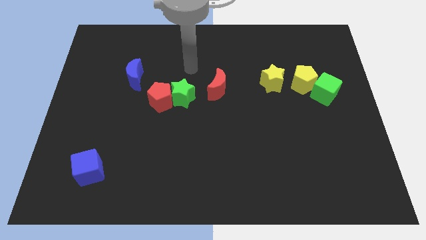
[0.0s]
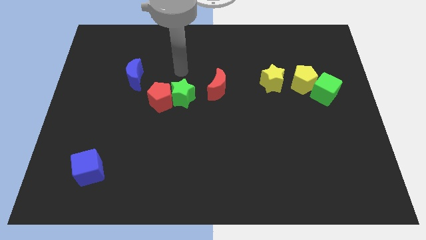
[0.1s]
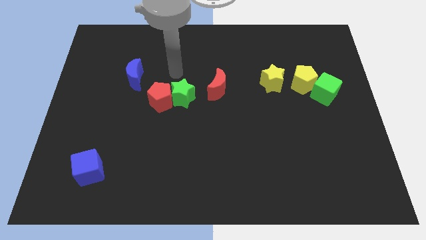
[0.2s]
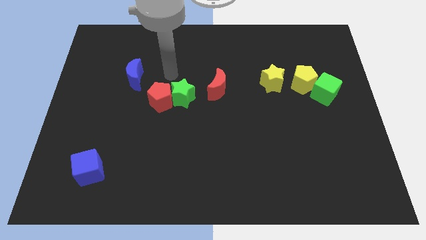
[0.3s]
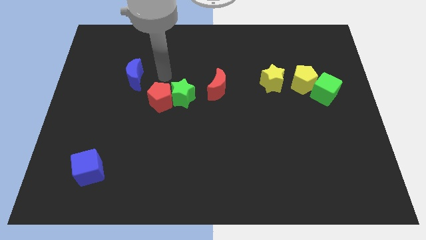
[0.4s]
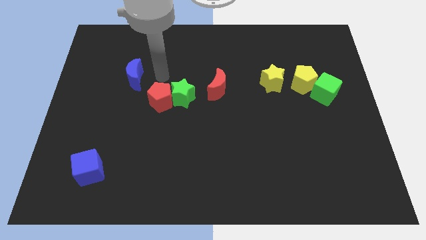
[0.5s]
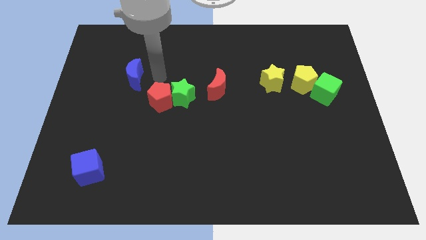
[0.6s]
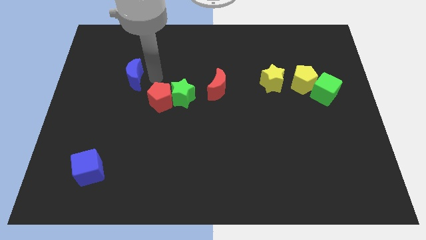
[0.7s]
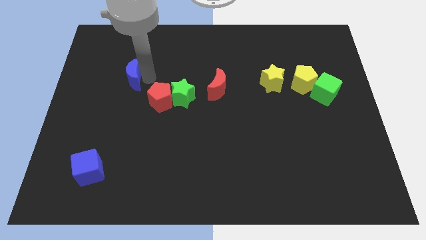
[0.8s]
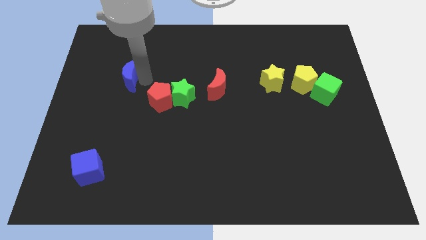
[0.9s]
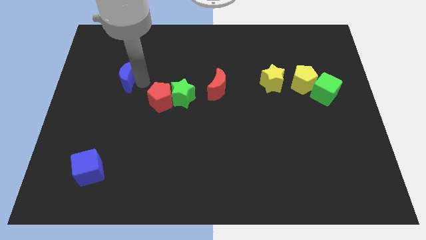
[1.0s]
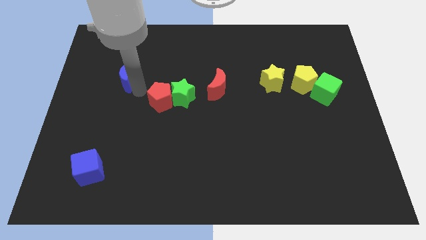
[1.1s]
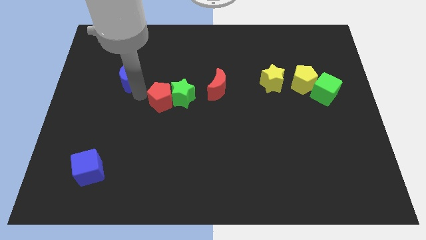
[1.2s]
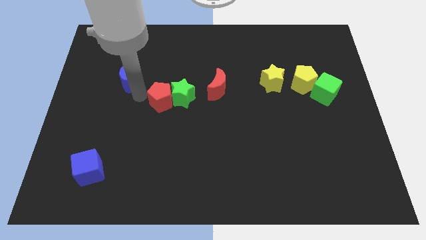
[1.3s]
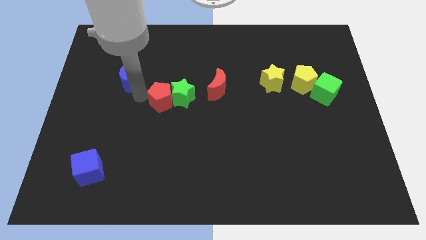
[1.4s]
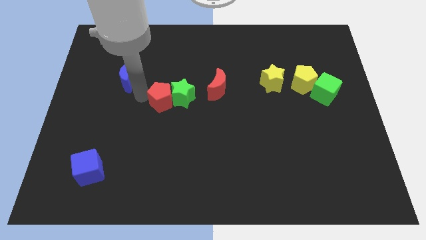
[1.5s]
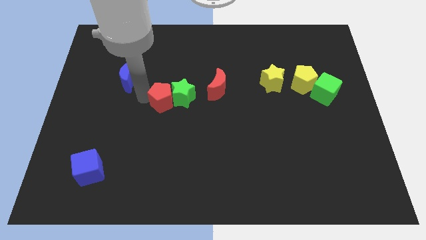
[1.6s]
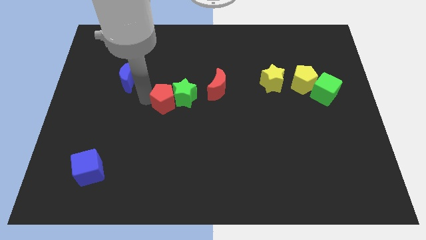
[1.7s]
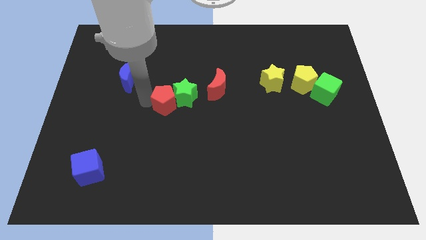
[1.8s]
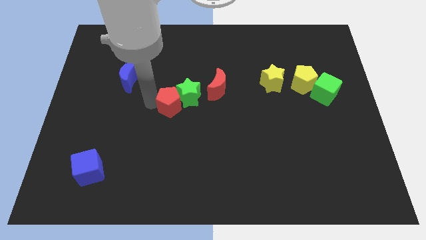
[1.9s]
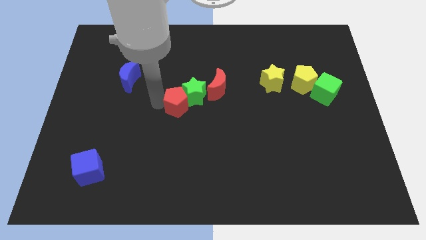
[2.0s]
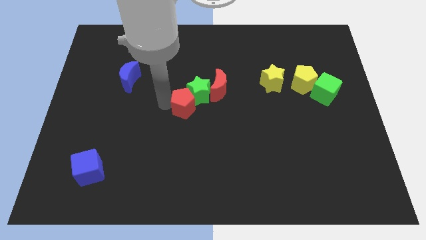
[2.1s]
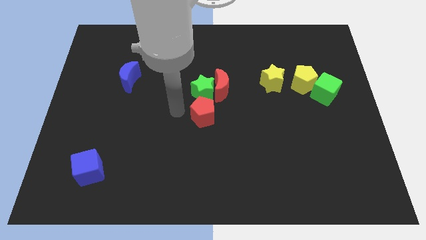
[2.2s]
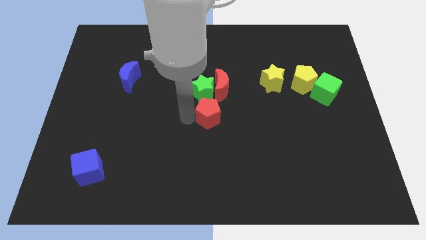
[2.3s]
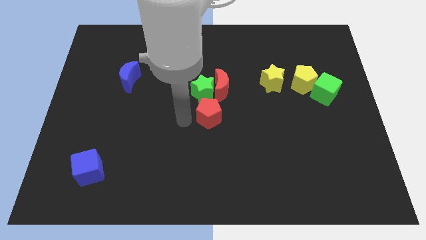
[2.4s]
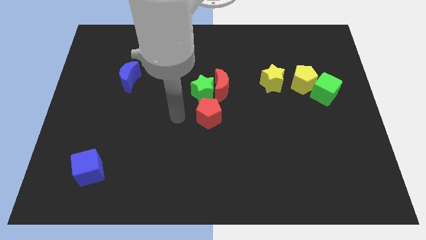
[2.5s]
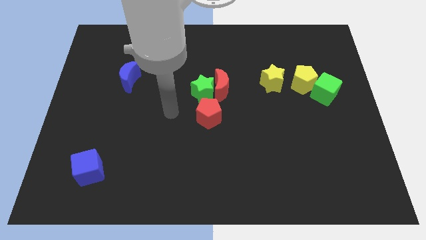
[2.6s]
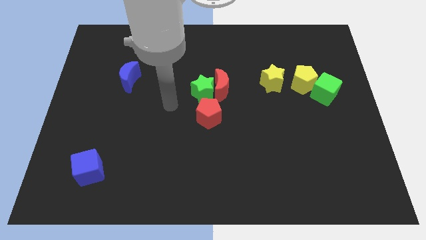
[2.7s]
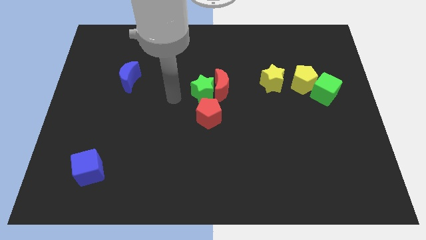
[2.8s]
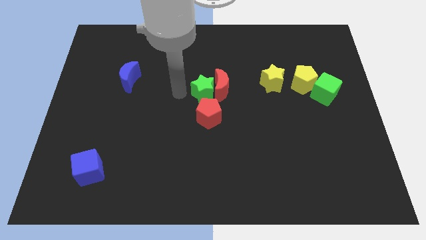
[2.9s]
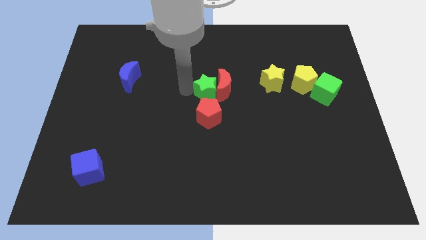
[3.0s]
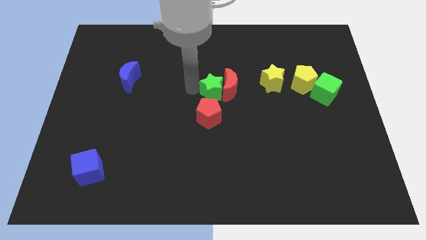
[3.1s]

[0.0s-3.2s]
push the red pentagon to the bottom of the green star

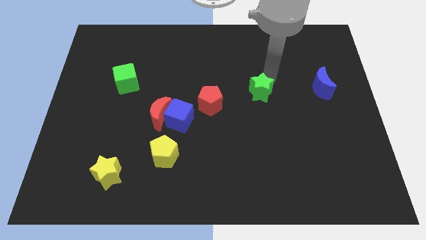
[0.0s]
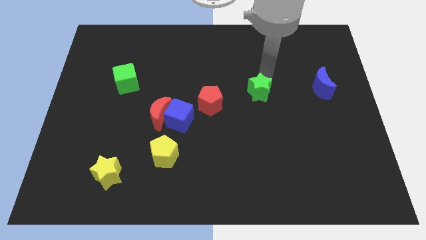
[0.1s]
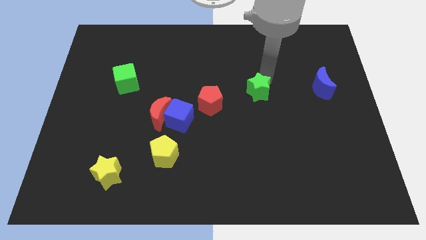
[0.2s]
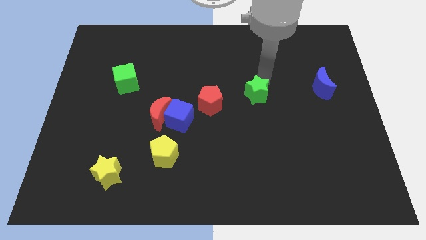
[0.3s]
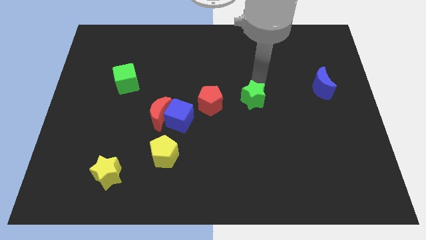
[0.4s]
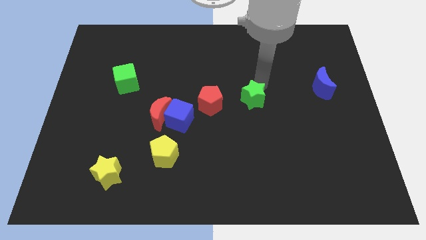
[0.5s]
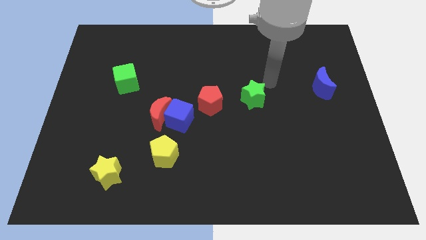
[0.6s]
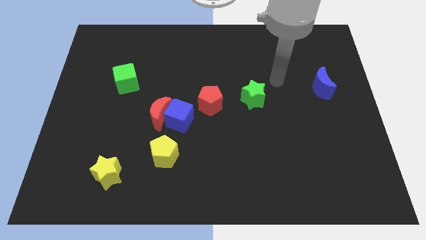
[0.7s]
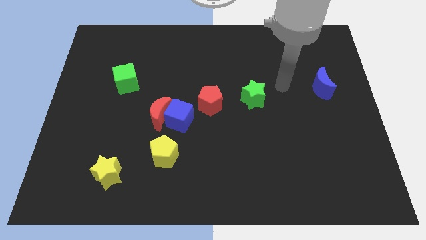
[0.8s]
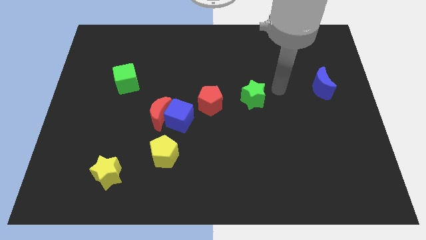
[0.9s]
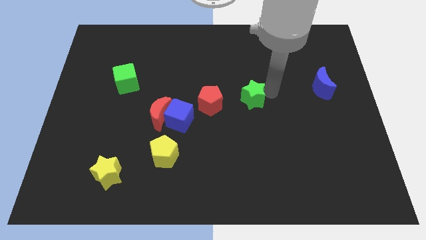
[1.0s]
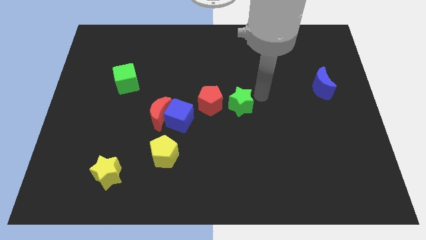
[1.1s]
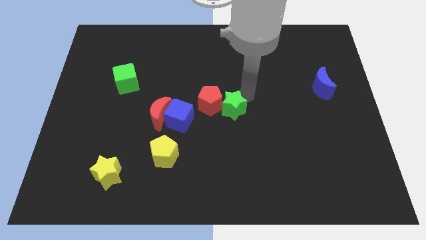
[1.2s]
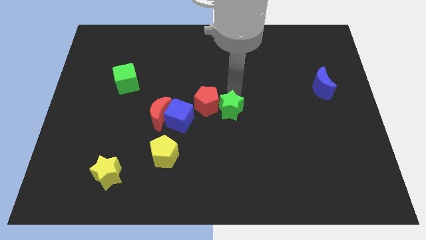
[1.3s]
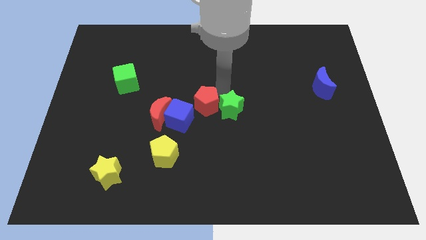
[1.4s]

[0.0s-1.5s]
slide the green star diagonally top right to the yellow pentagon

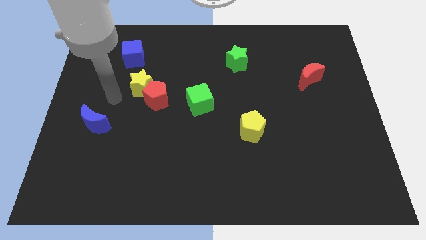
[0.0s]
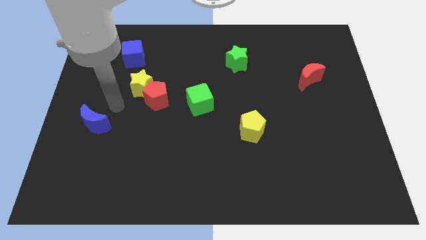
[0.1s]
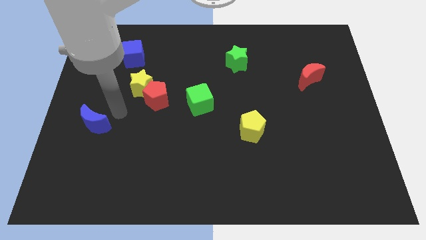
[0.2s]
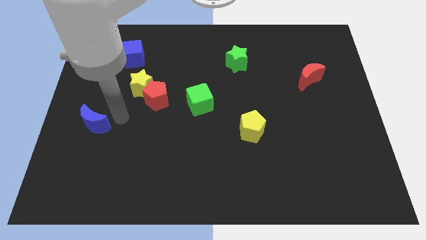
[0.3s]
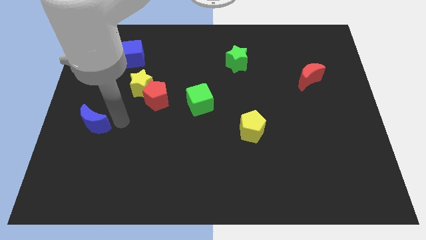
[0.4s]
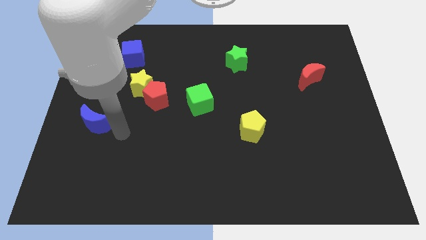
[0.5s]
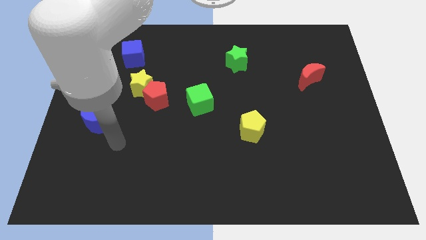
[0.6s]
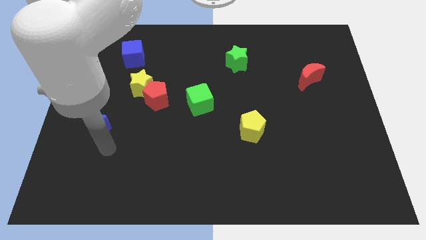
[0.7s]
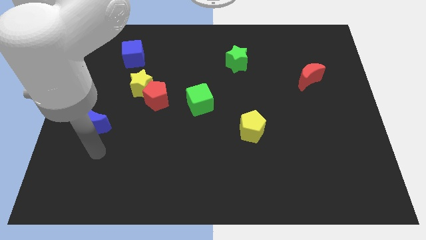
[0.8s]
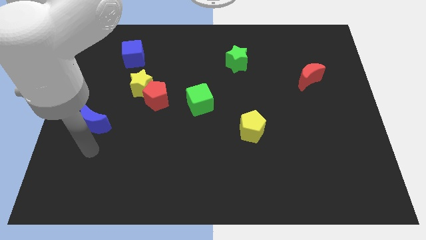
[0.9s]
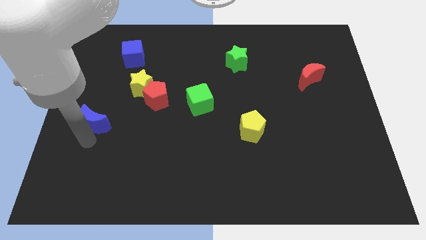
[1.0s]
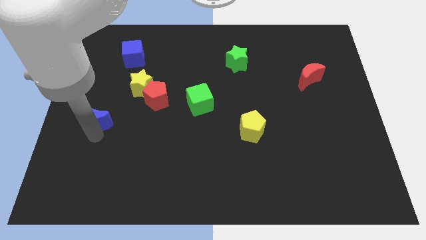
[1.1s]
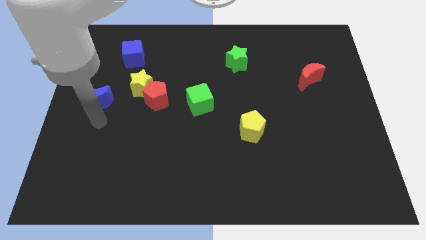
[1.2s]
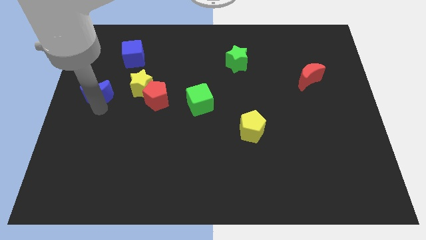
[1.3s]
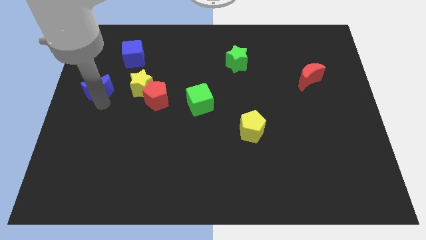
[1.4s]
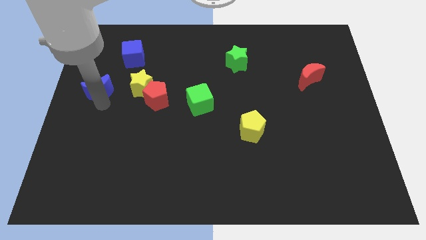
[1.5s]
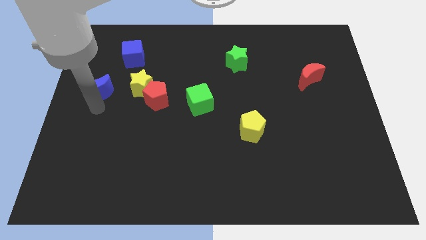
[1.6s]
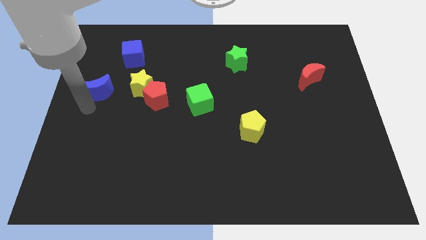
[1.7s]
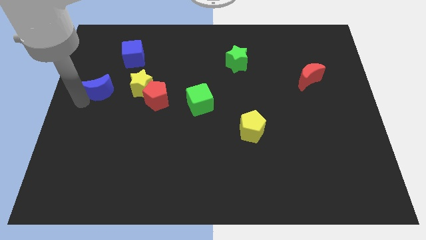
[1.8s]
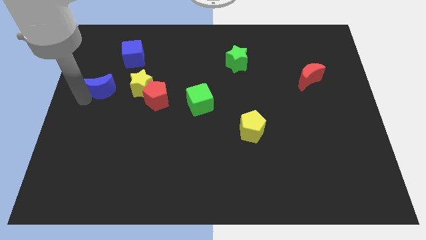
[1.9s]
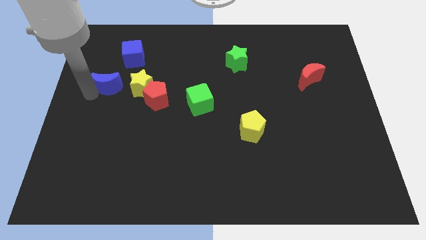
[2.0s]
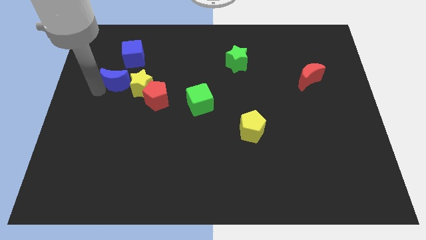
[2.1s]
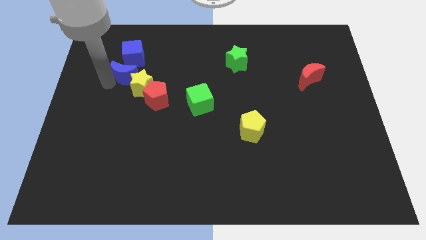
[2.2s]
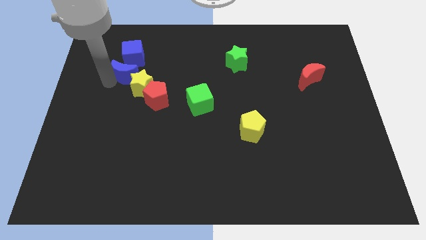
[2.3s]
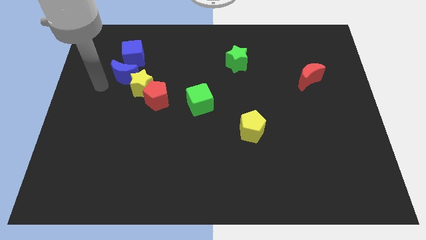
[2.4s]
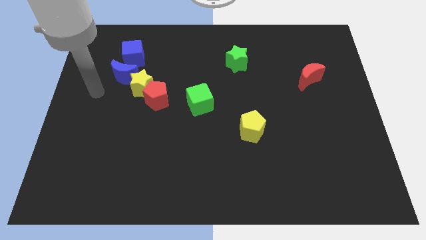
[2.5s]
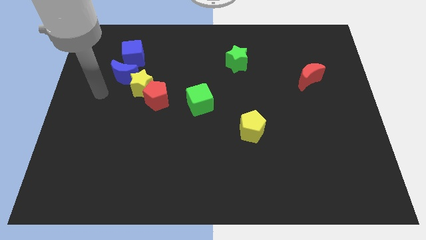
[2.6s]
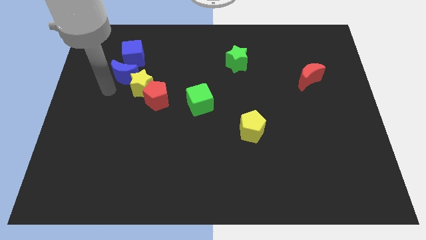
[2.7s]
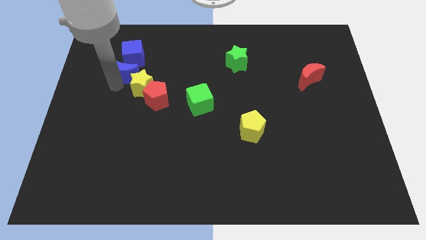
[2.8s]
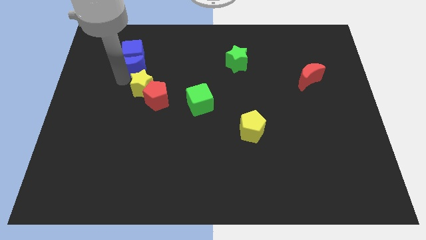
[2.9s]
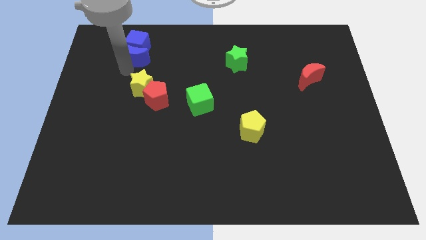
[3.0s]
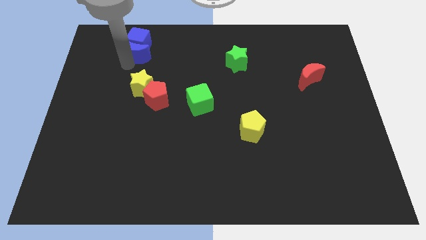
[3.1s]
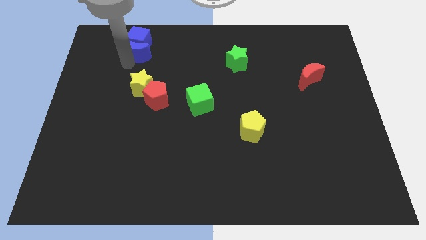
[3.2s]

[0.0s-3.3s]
push the blue crescent into blue cube

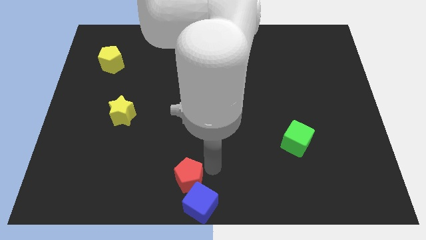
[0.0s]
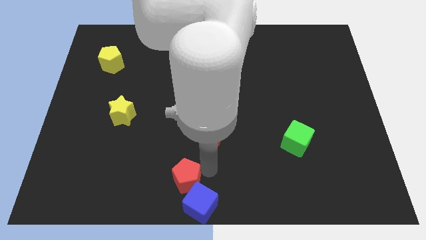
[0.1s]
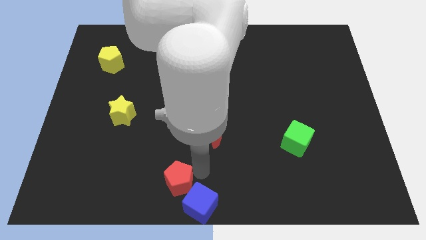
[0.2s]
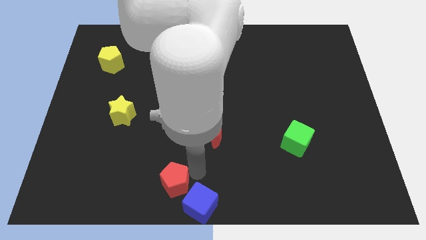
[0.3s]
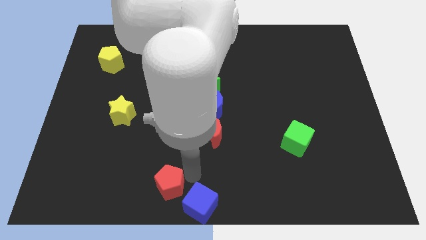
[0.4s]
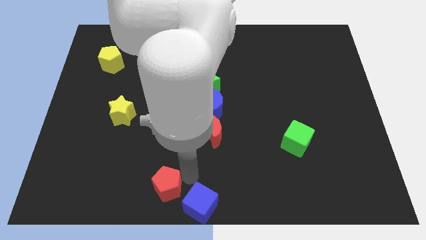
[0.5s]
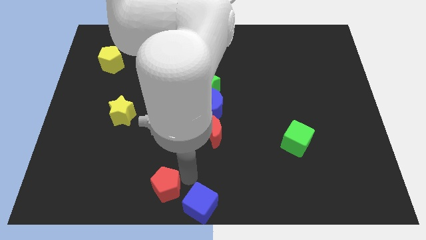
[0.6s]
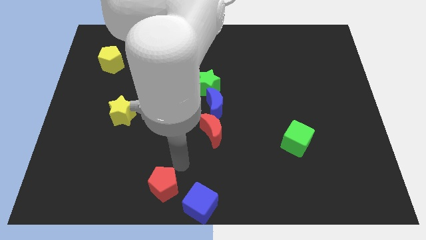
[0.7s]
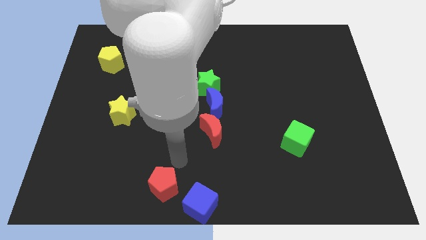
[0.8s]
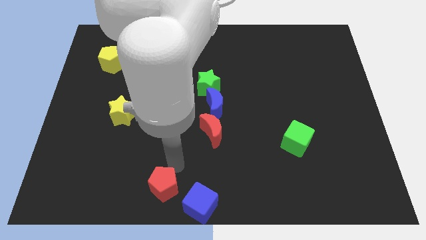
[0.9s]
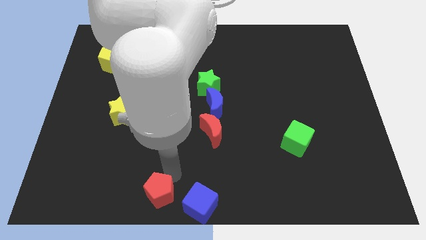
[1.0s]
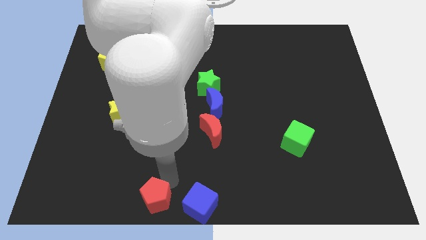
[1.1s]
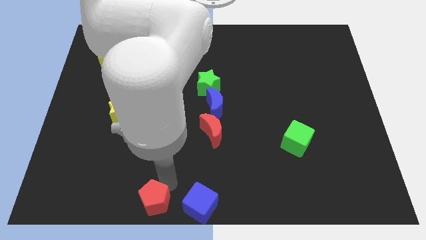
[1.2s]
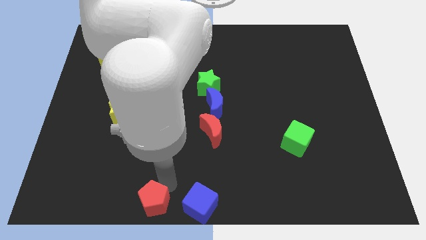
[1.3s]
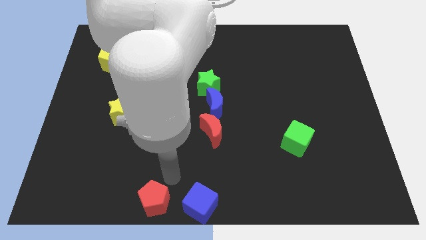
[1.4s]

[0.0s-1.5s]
move the red pentagon to the left of the blue cube
